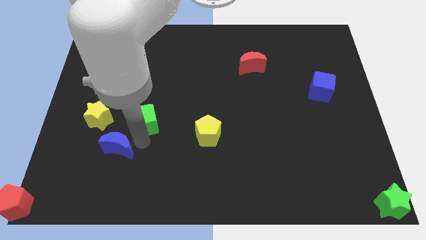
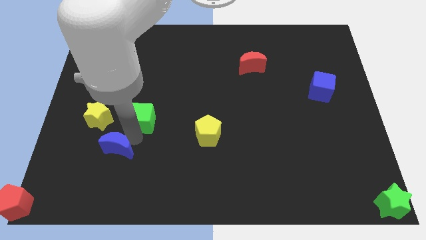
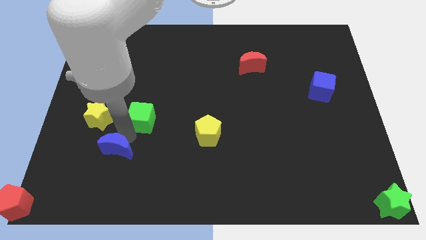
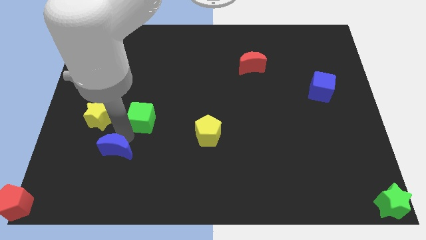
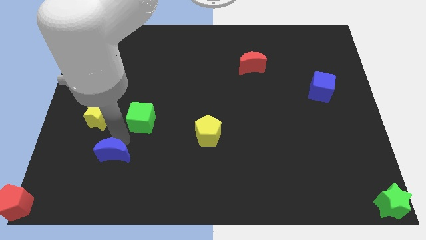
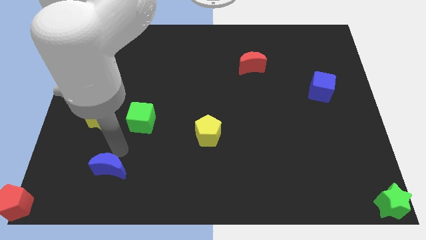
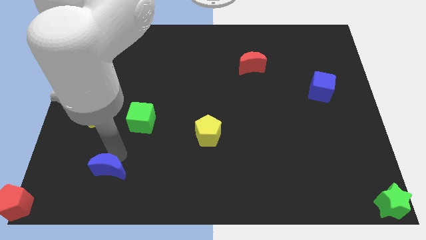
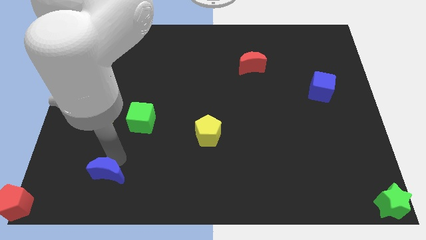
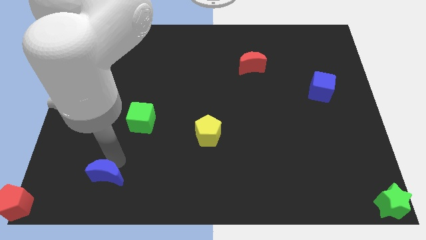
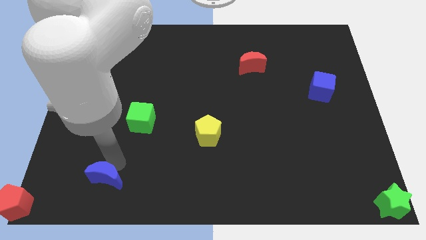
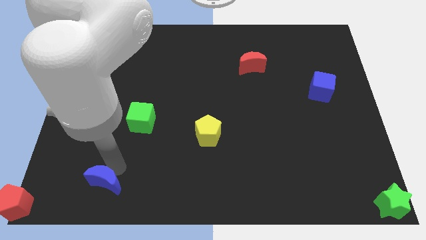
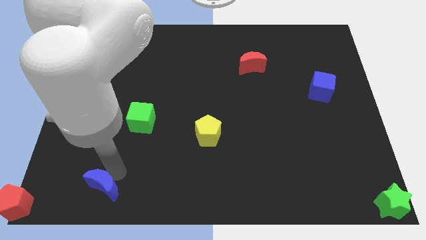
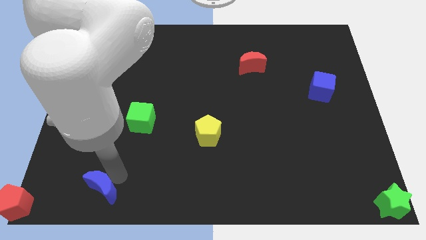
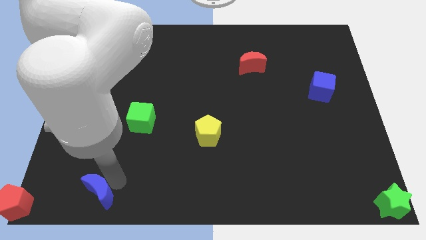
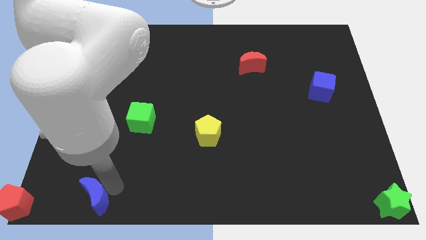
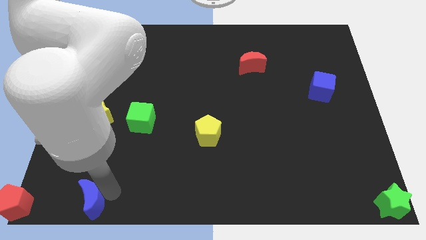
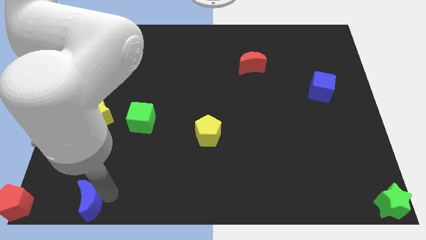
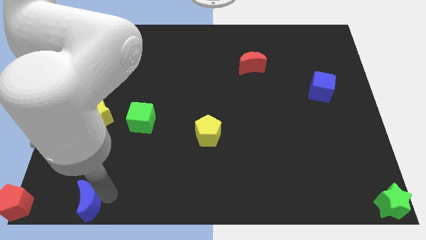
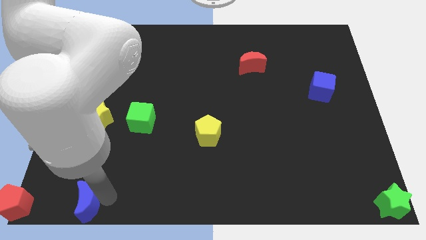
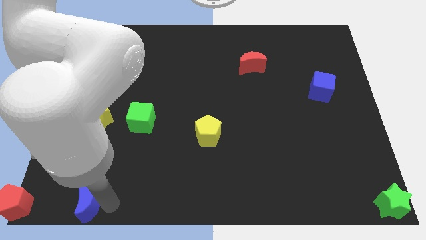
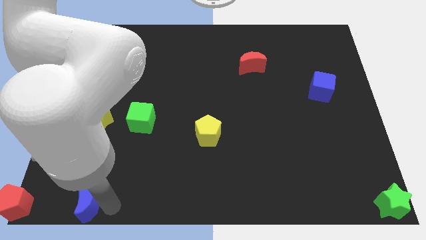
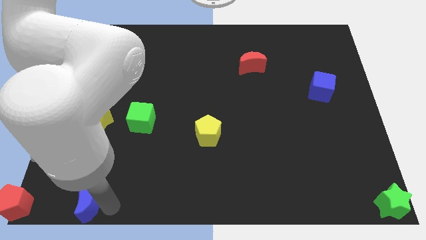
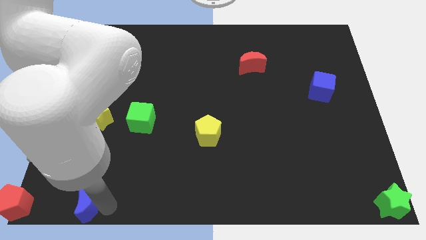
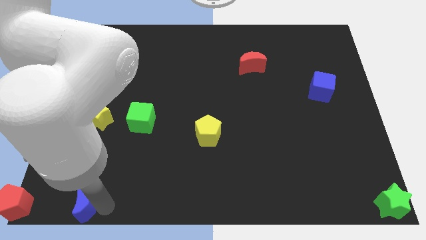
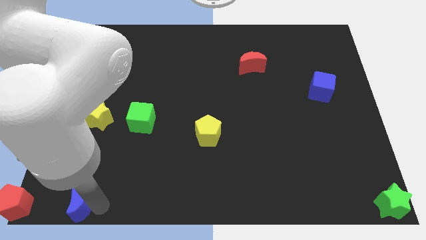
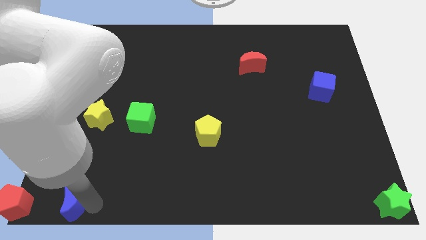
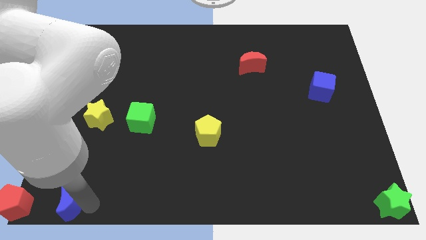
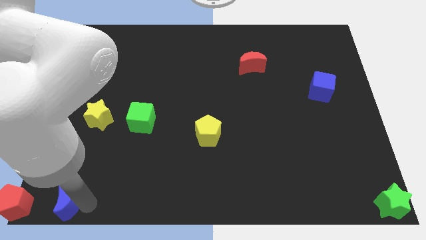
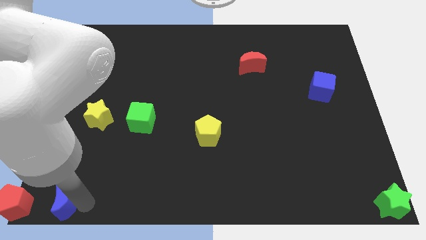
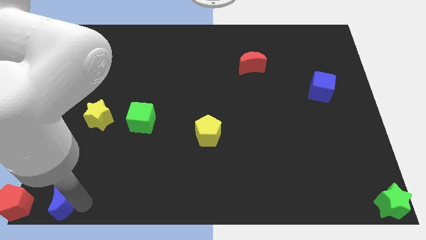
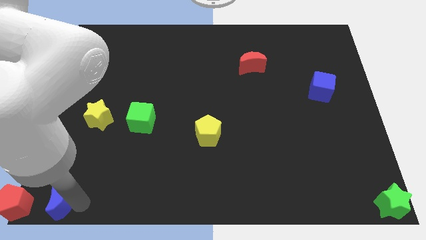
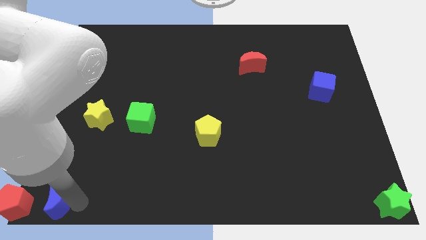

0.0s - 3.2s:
push the blue moon towards the red pentagon

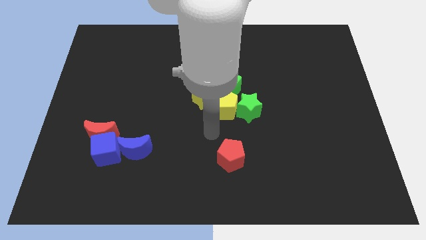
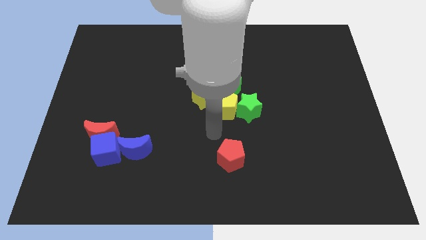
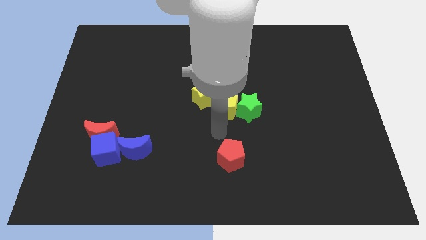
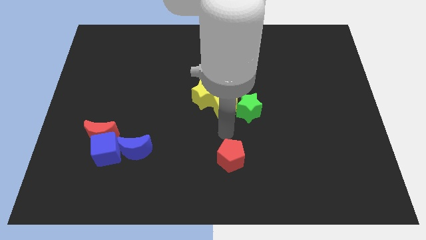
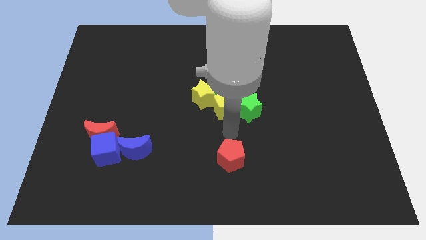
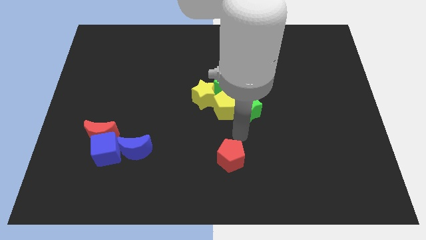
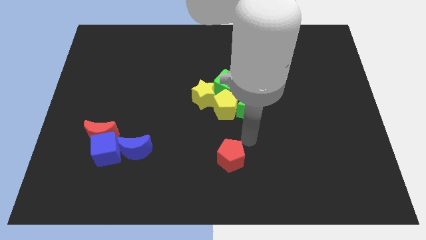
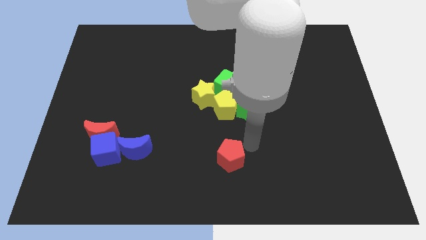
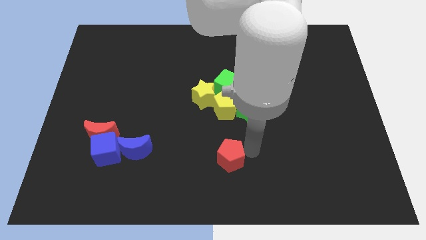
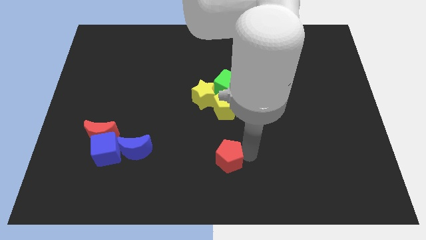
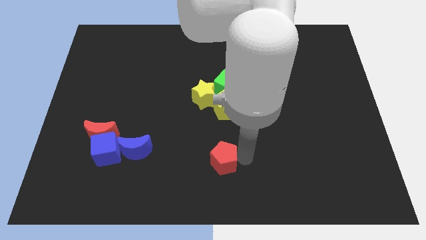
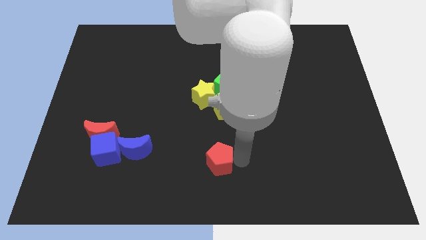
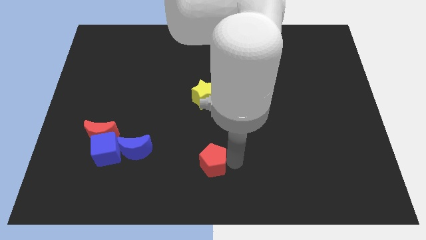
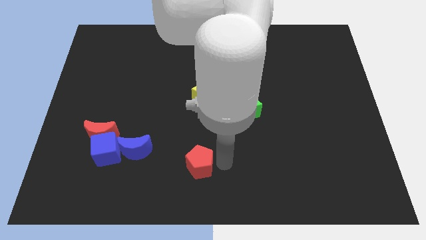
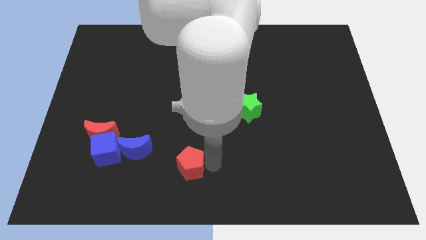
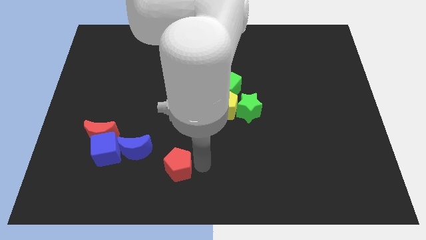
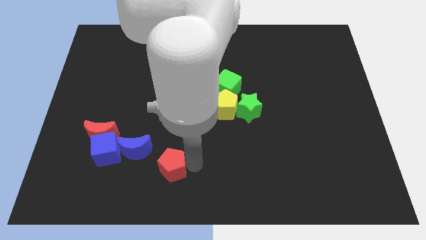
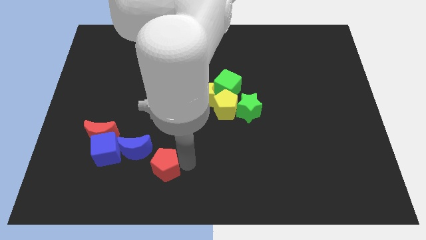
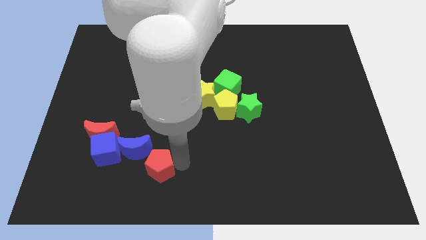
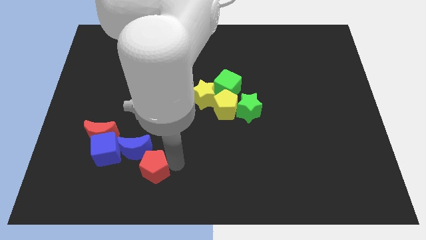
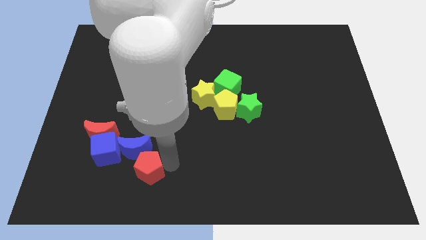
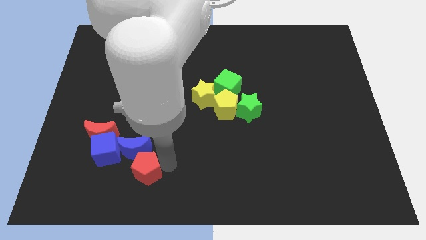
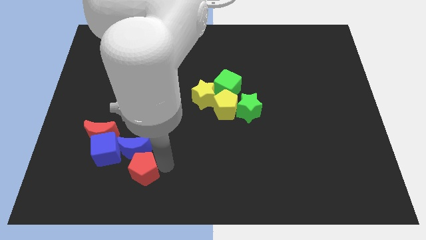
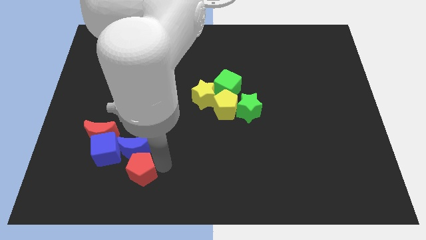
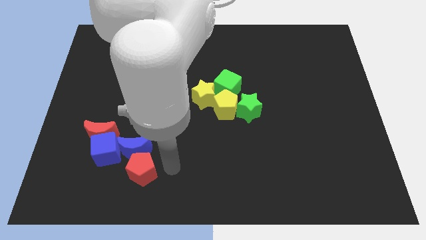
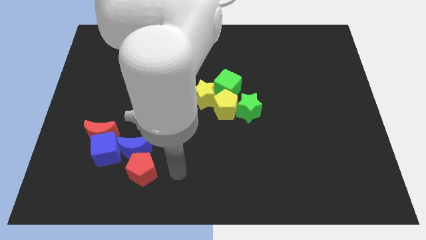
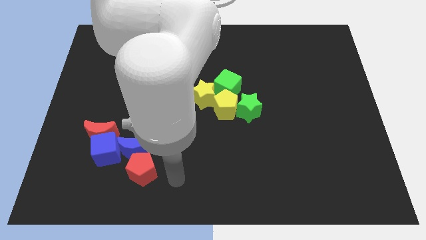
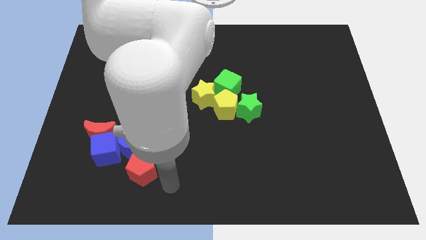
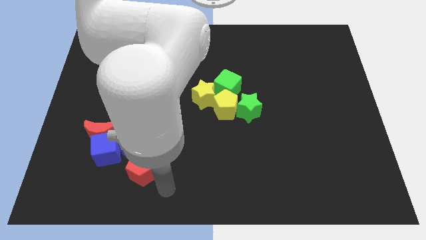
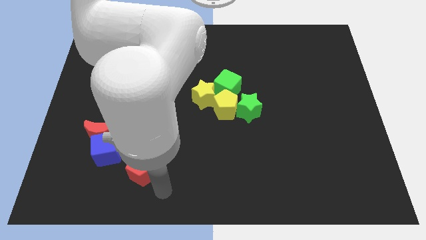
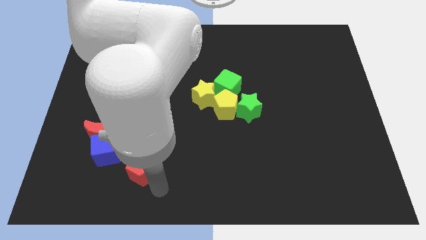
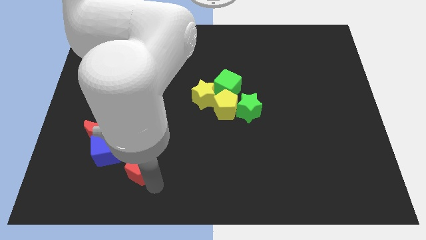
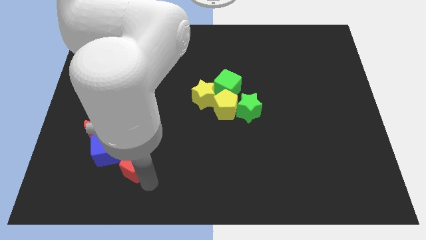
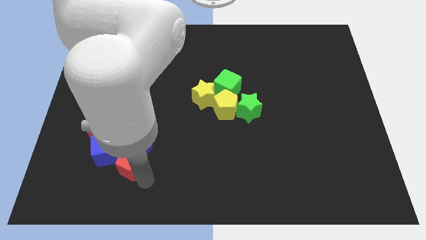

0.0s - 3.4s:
push the red pentagon to the bottom of blue cubes

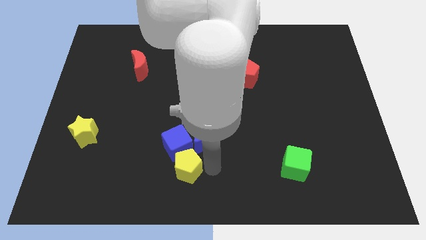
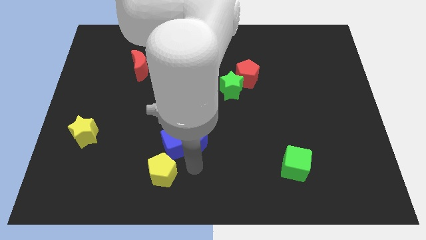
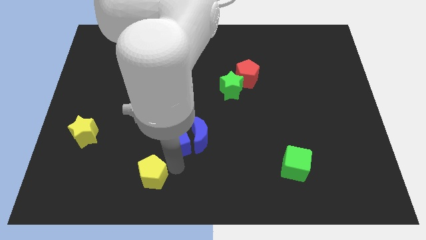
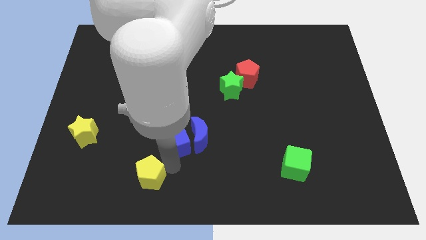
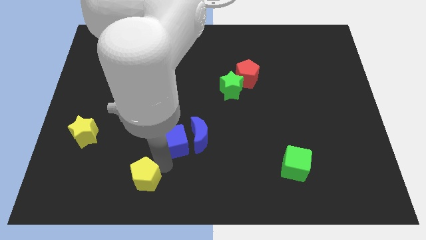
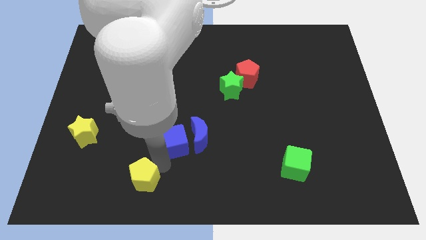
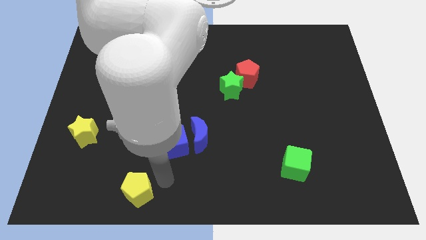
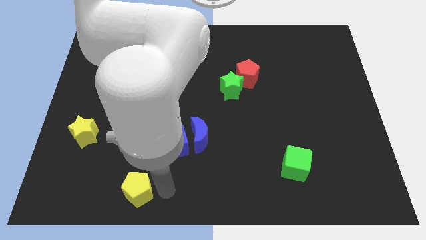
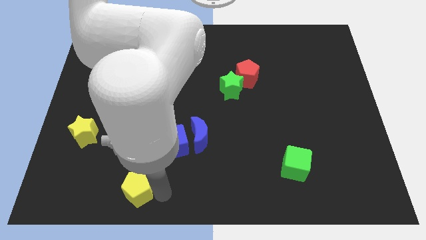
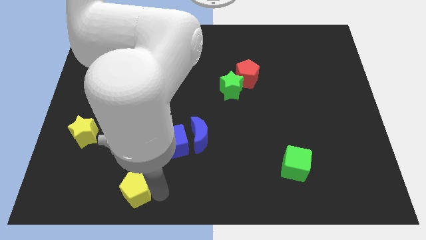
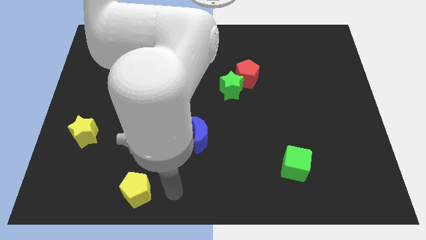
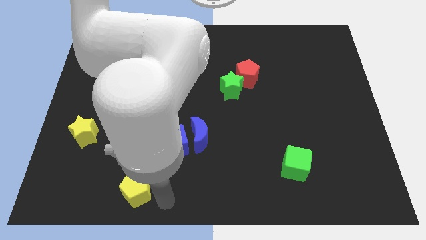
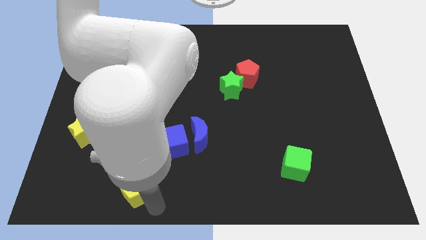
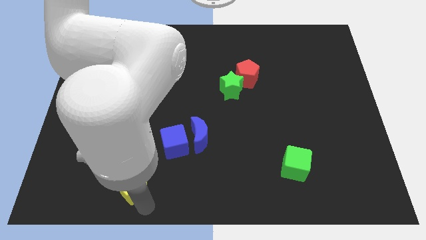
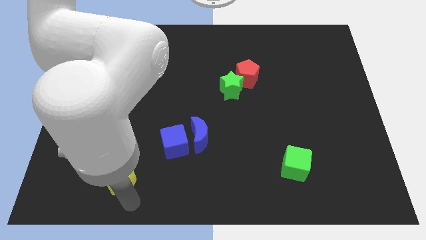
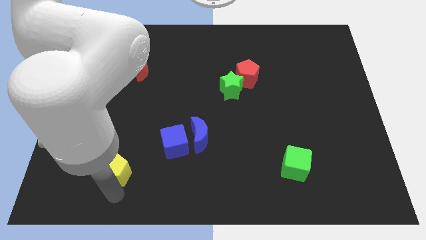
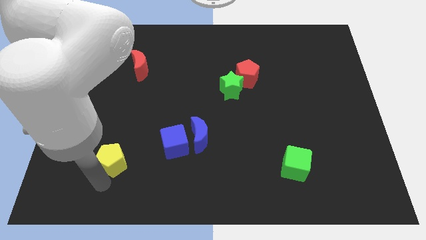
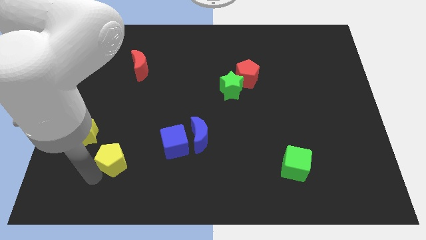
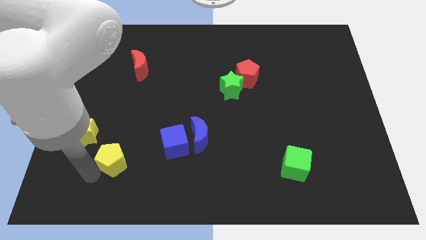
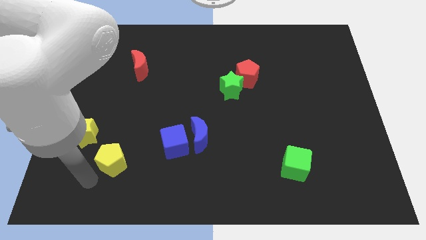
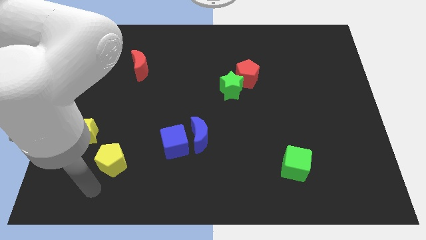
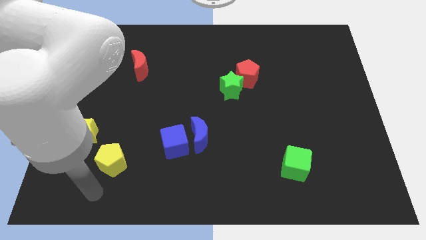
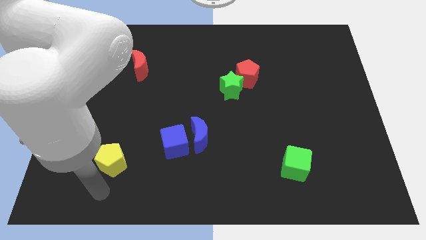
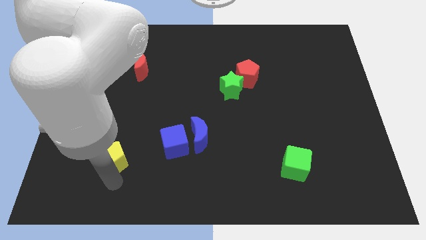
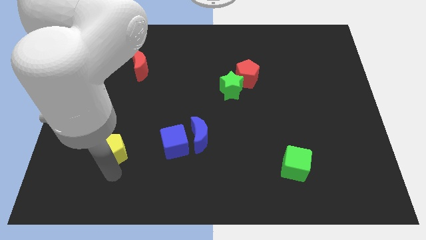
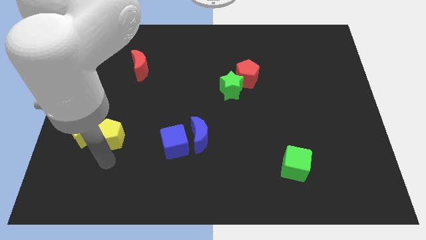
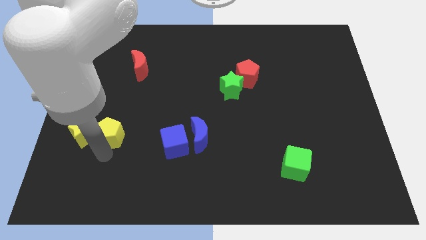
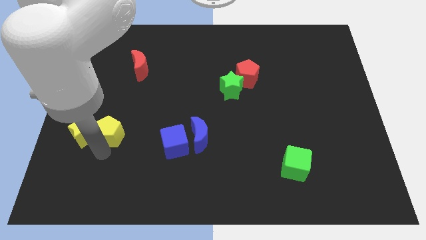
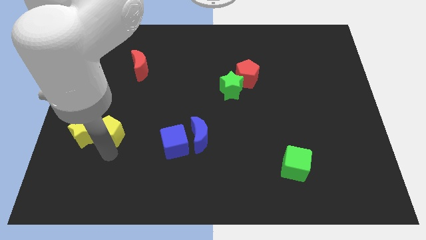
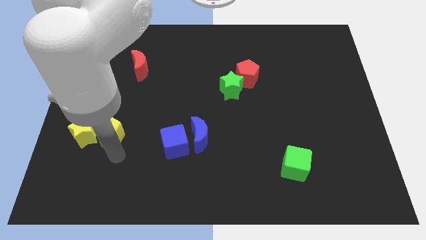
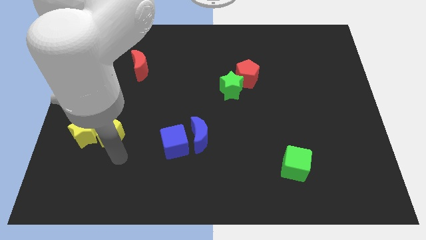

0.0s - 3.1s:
place the yellow pentagon to the right of the yellow star
